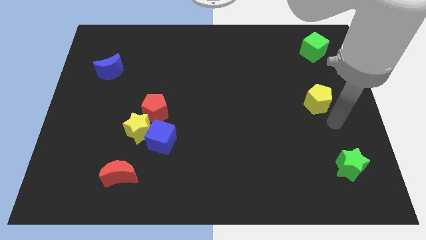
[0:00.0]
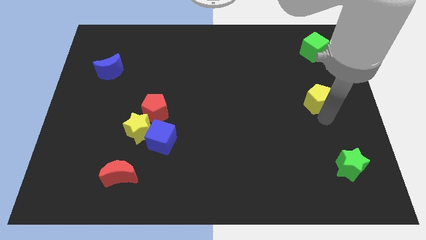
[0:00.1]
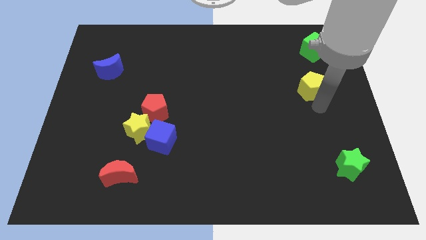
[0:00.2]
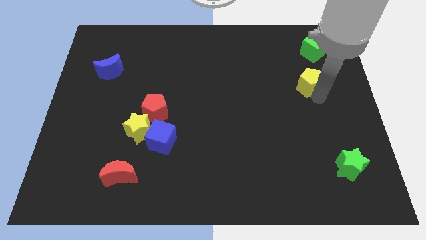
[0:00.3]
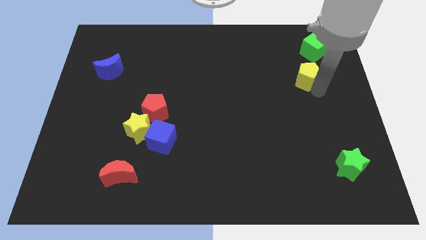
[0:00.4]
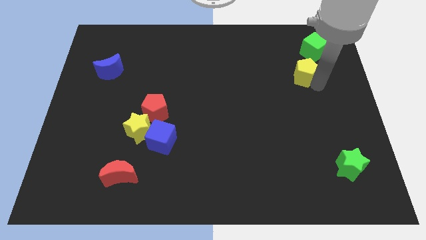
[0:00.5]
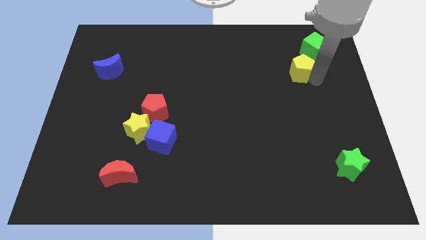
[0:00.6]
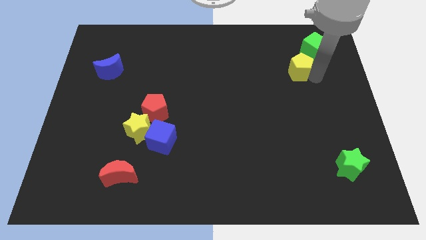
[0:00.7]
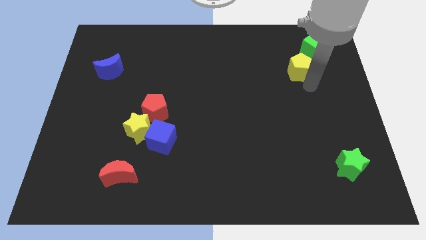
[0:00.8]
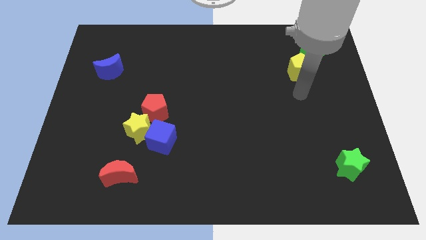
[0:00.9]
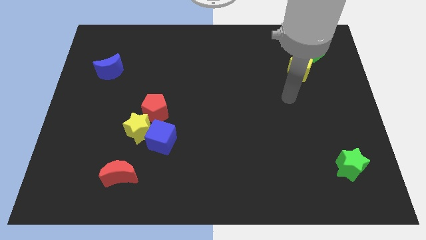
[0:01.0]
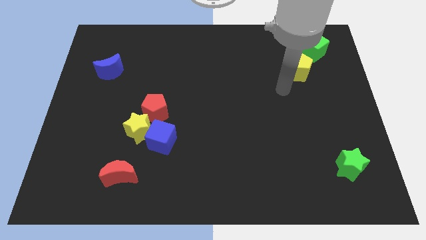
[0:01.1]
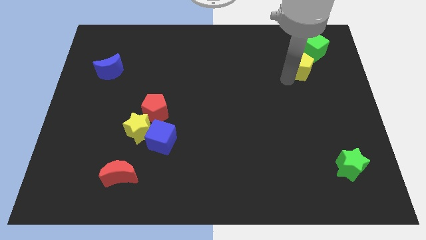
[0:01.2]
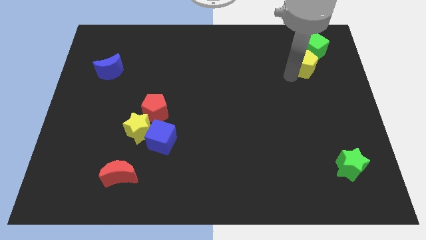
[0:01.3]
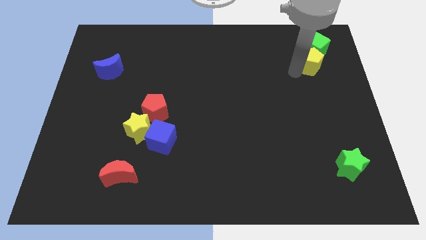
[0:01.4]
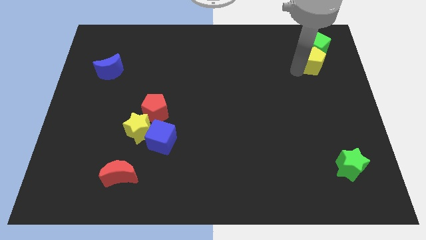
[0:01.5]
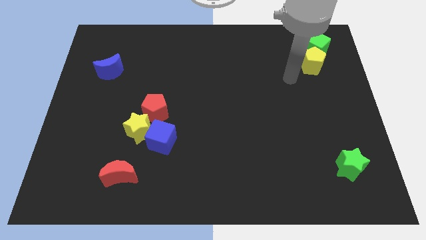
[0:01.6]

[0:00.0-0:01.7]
push the yellow pentagon to the bottom left to the green cube

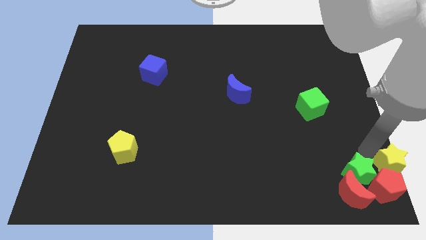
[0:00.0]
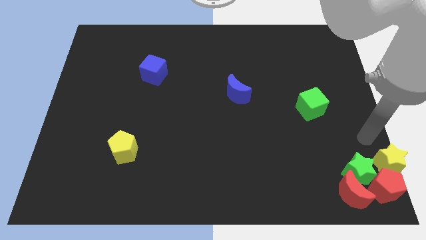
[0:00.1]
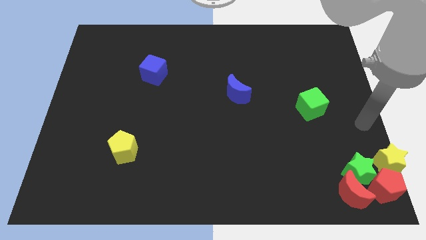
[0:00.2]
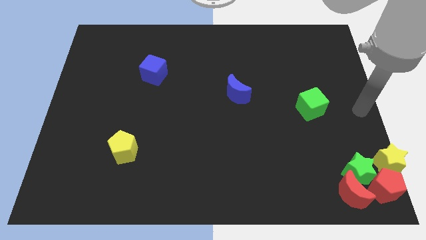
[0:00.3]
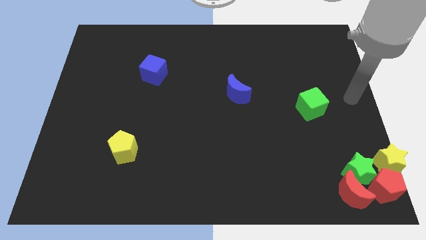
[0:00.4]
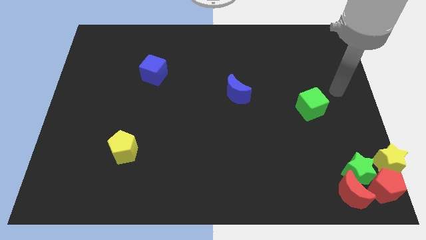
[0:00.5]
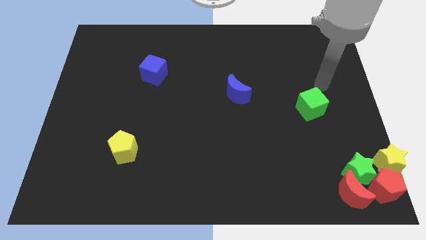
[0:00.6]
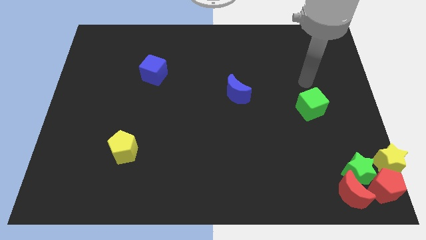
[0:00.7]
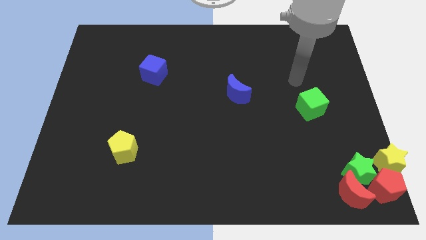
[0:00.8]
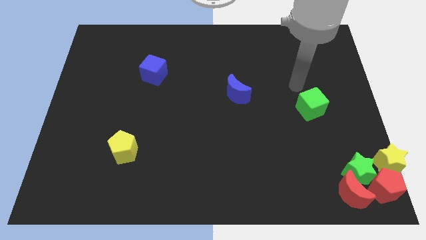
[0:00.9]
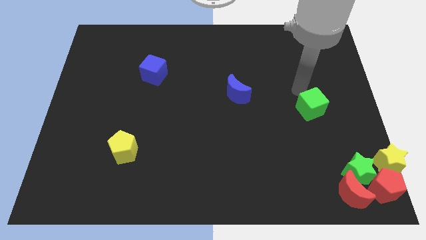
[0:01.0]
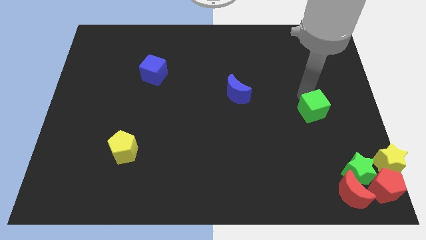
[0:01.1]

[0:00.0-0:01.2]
move your arm away from the yellow star

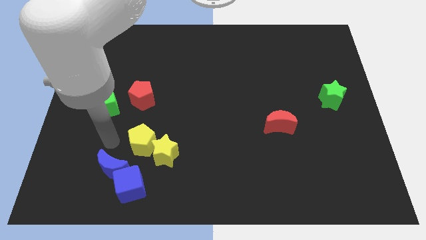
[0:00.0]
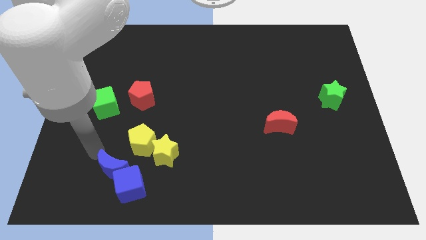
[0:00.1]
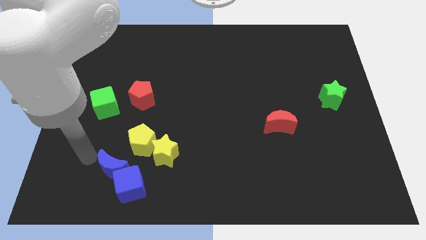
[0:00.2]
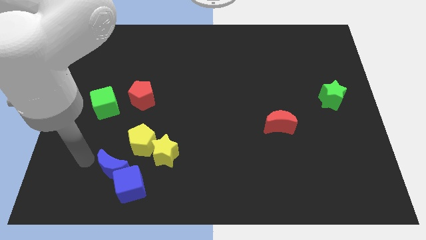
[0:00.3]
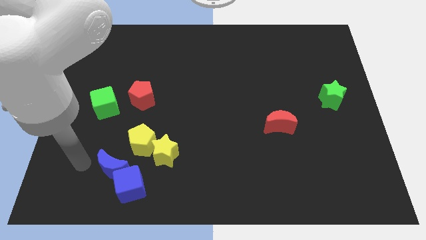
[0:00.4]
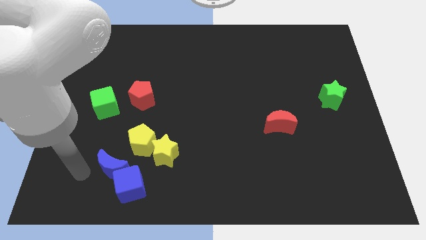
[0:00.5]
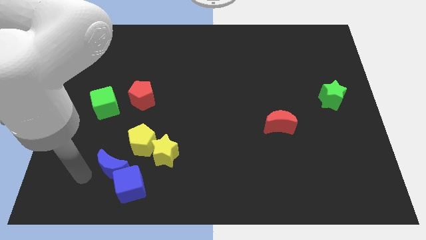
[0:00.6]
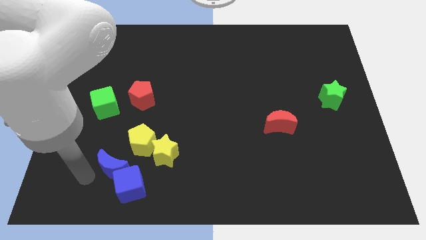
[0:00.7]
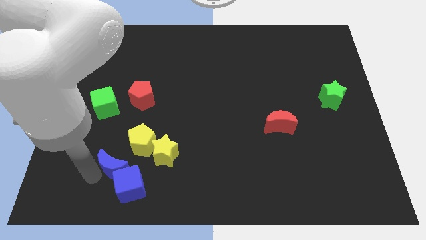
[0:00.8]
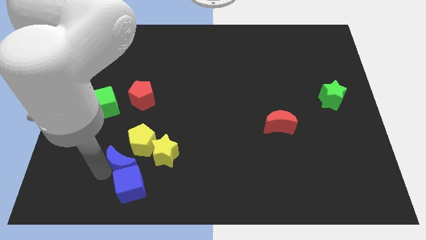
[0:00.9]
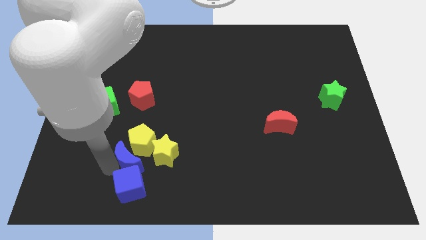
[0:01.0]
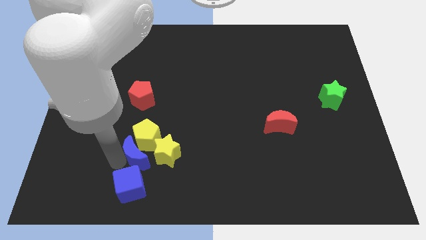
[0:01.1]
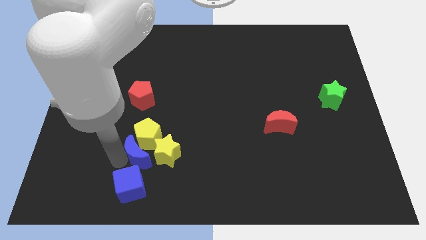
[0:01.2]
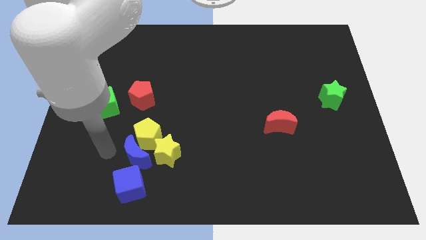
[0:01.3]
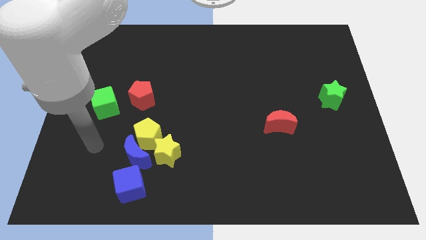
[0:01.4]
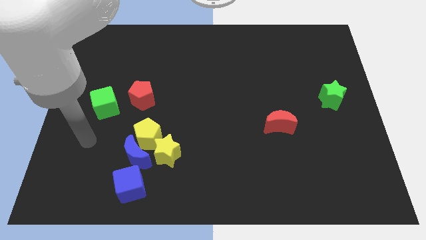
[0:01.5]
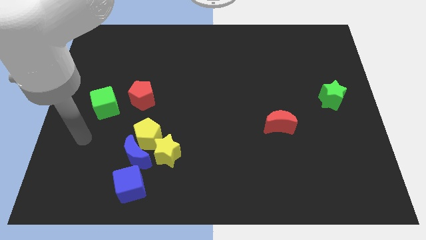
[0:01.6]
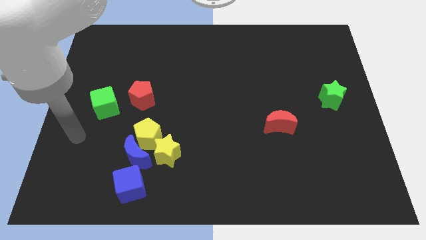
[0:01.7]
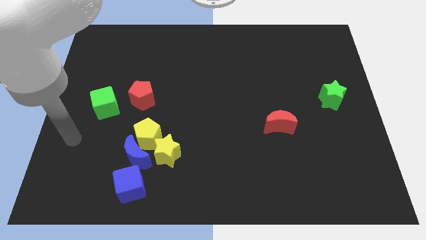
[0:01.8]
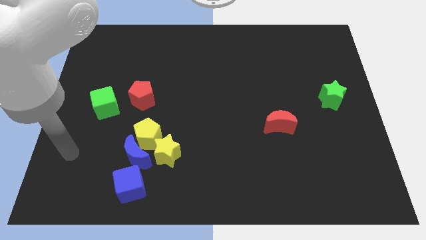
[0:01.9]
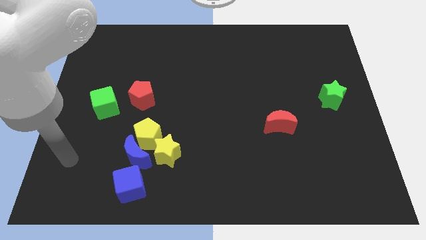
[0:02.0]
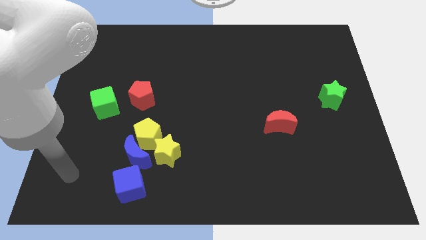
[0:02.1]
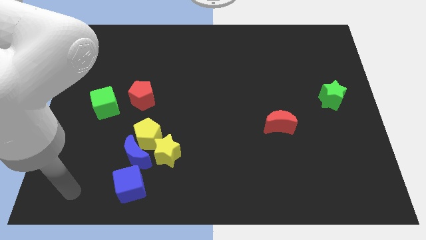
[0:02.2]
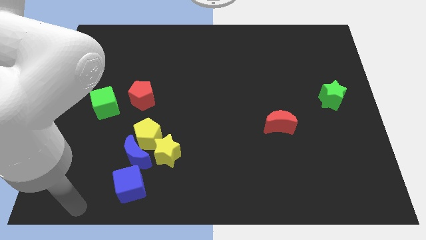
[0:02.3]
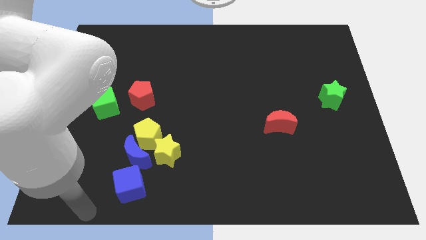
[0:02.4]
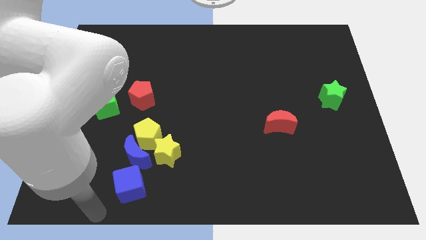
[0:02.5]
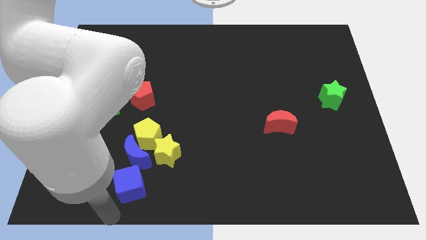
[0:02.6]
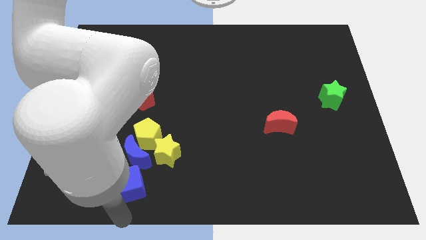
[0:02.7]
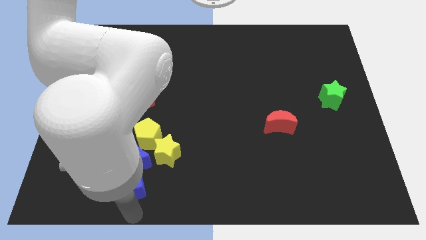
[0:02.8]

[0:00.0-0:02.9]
move the blue moon to the right side slightly

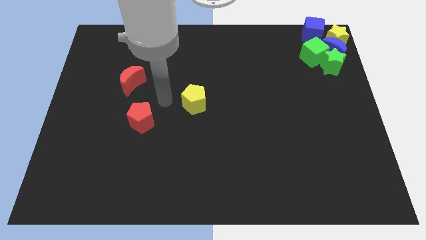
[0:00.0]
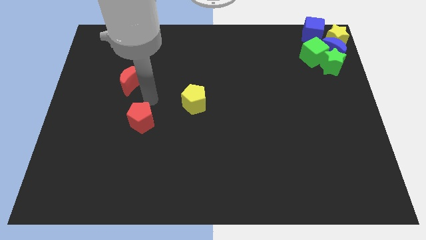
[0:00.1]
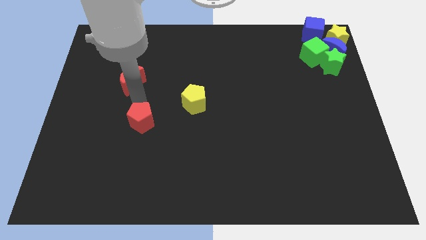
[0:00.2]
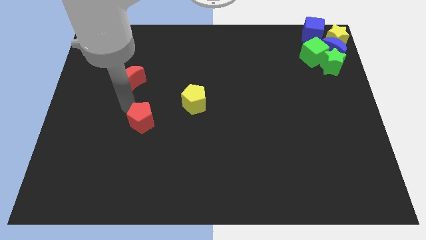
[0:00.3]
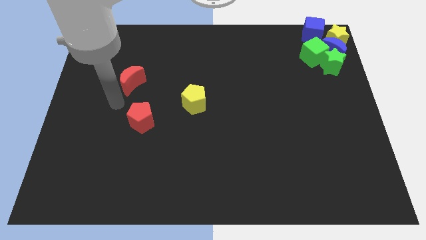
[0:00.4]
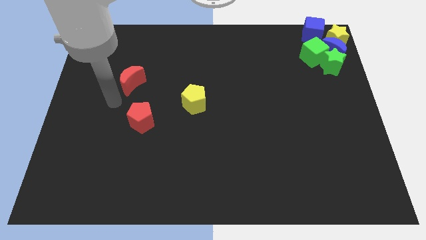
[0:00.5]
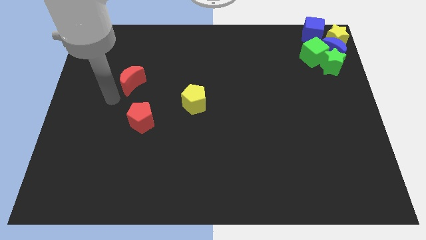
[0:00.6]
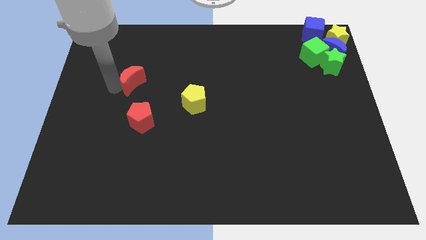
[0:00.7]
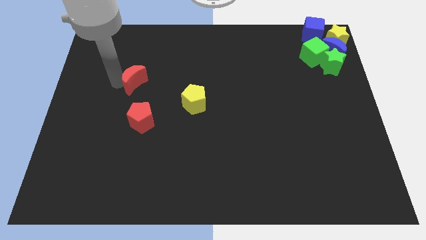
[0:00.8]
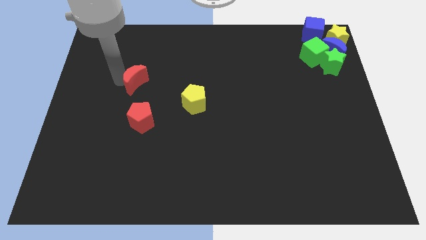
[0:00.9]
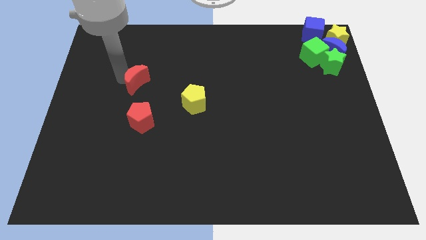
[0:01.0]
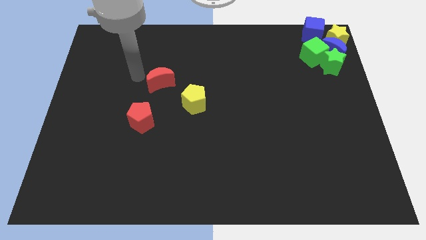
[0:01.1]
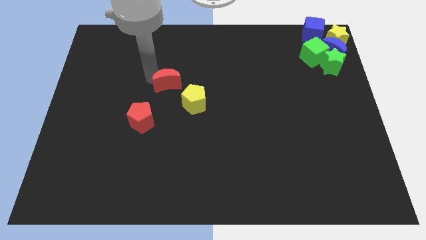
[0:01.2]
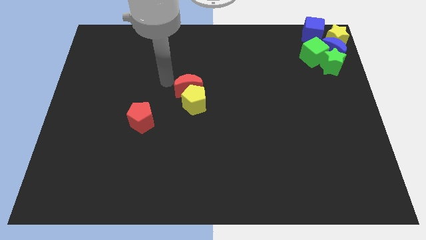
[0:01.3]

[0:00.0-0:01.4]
push the red crescent at the top of the yellow pentagon

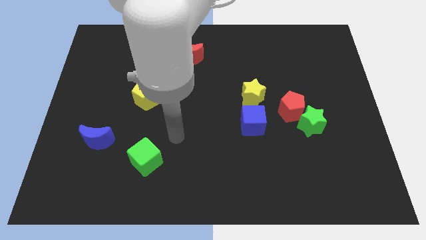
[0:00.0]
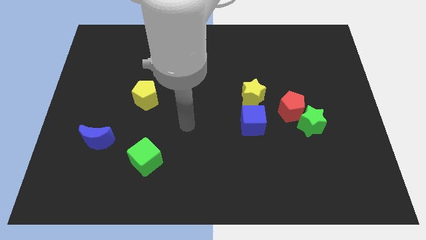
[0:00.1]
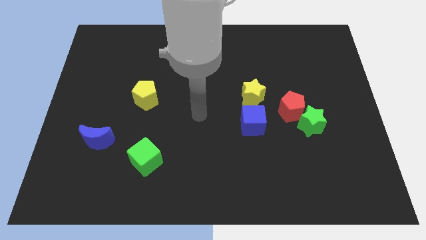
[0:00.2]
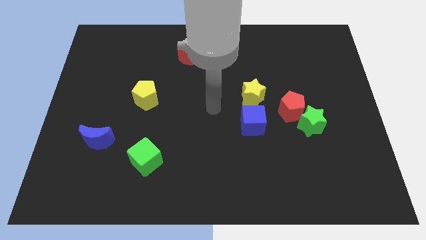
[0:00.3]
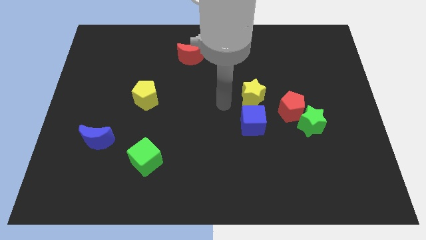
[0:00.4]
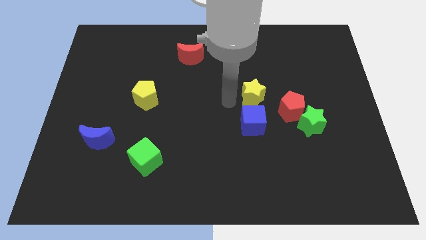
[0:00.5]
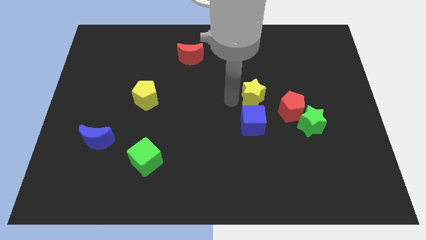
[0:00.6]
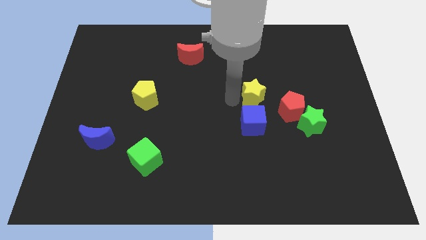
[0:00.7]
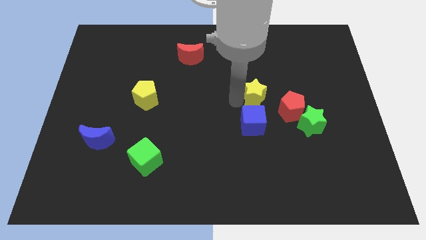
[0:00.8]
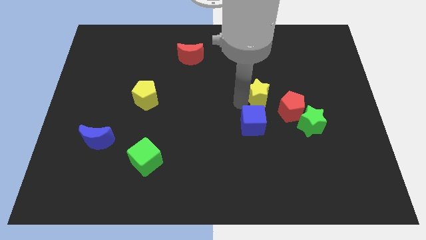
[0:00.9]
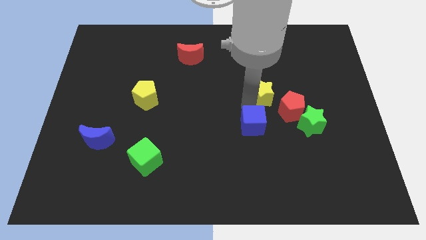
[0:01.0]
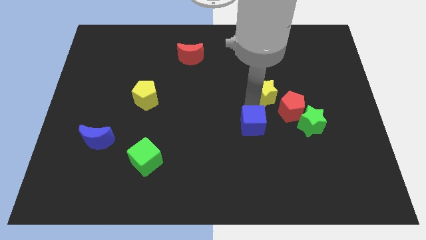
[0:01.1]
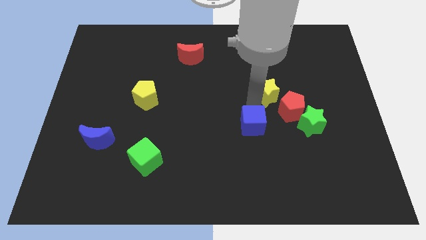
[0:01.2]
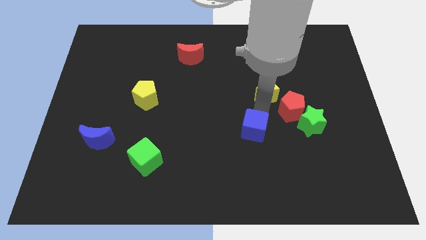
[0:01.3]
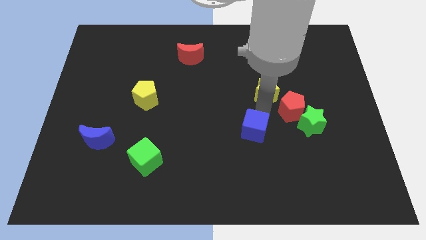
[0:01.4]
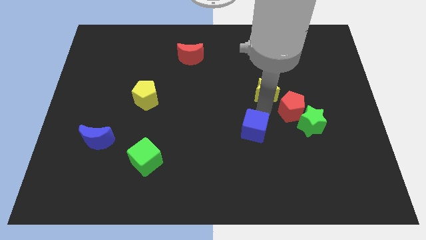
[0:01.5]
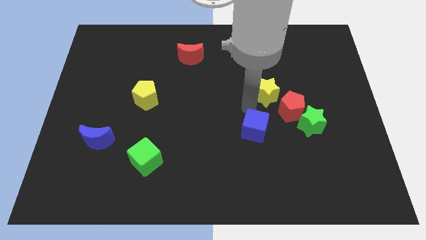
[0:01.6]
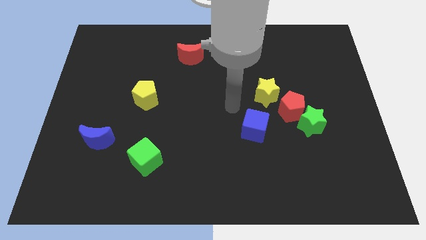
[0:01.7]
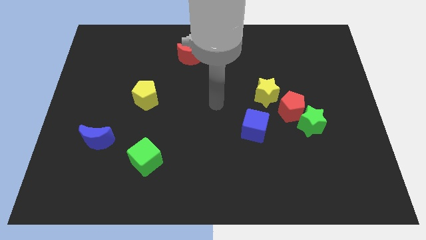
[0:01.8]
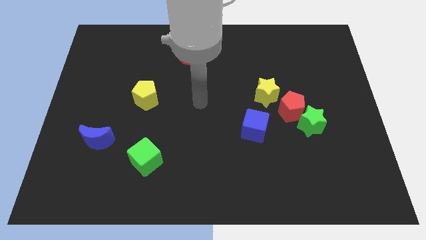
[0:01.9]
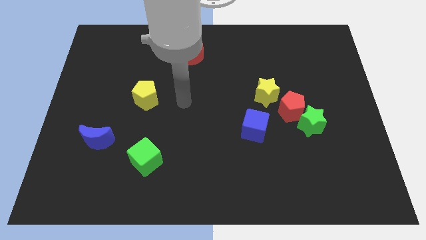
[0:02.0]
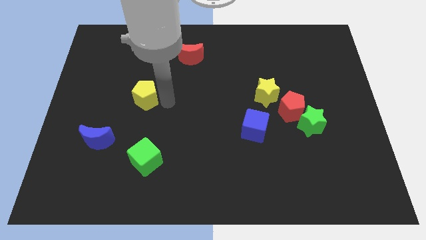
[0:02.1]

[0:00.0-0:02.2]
separate the blue cube and the yellow star
